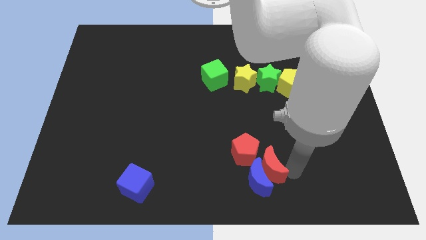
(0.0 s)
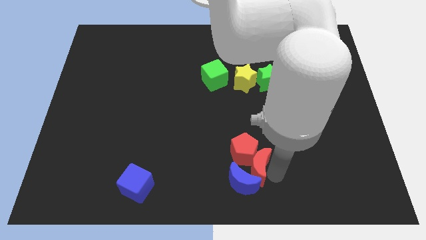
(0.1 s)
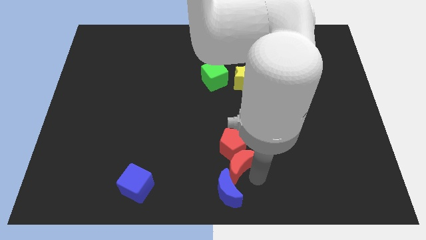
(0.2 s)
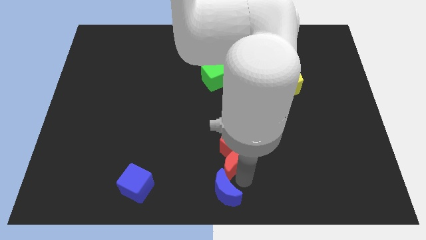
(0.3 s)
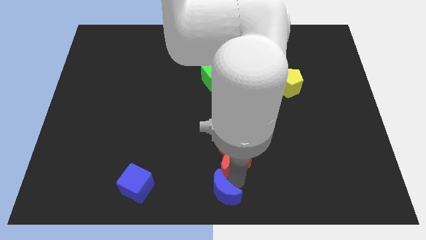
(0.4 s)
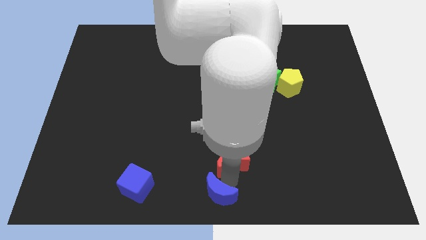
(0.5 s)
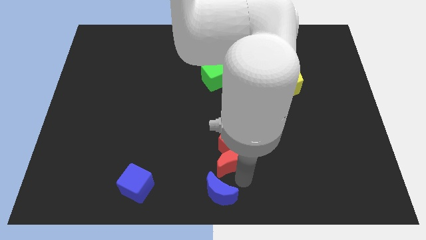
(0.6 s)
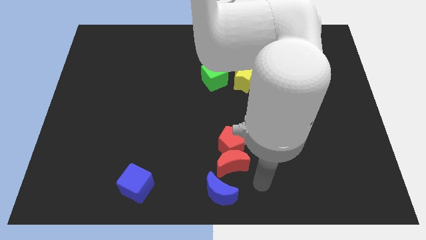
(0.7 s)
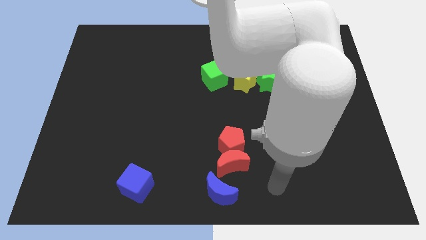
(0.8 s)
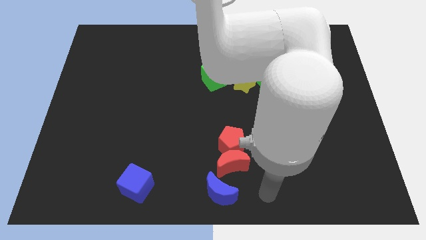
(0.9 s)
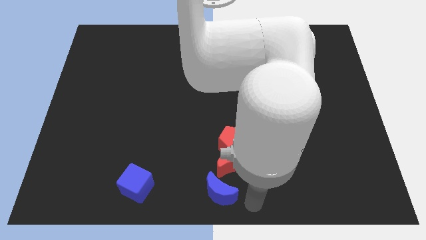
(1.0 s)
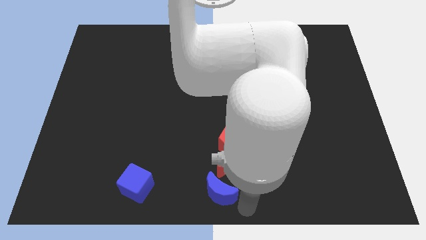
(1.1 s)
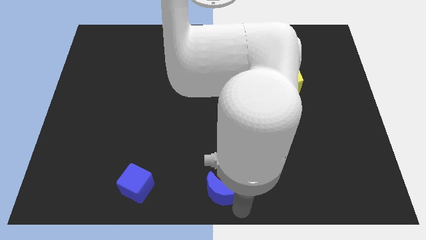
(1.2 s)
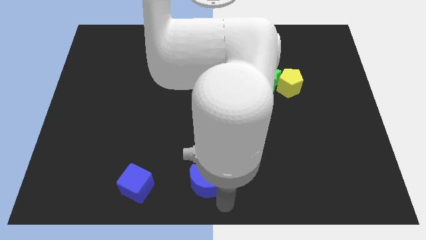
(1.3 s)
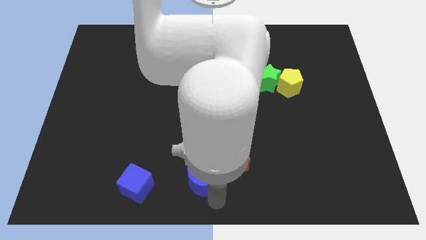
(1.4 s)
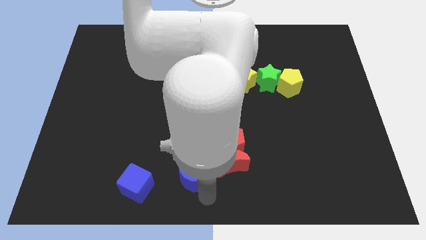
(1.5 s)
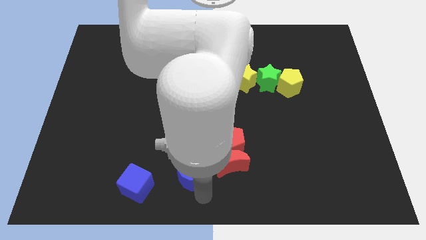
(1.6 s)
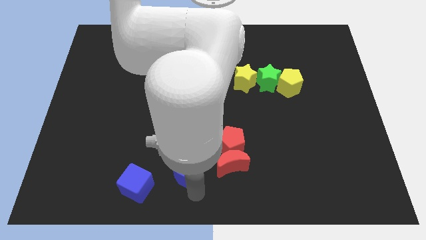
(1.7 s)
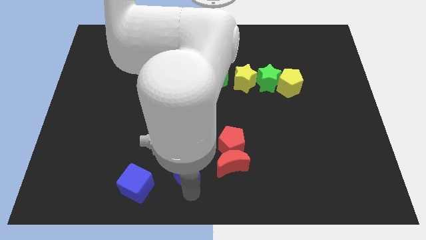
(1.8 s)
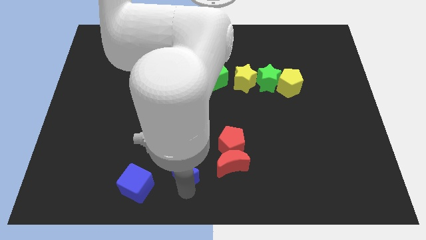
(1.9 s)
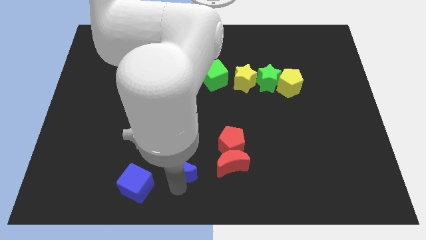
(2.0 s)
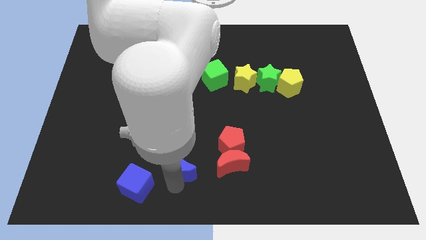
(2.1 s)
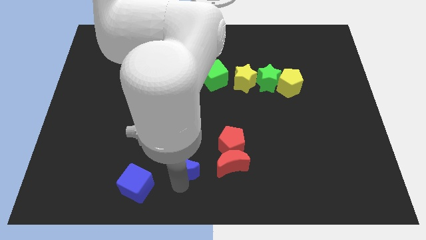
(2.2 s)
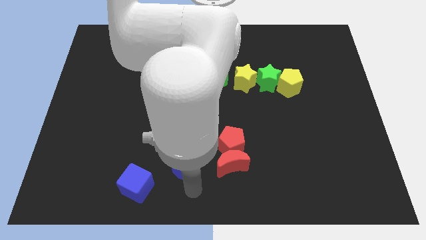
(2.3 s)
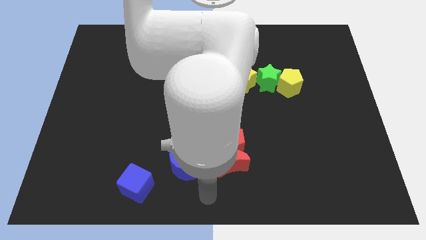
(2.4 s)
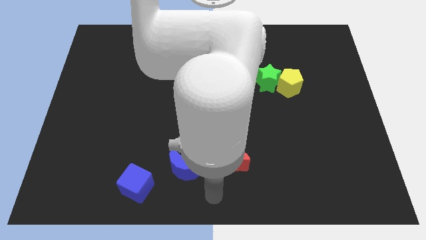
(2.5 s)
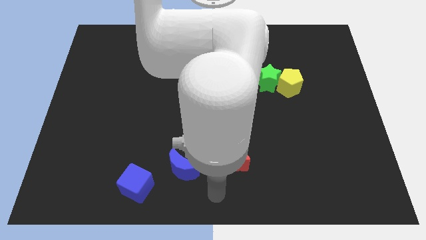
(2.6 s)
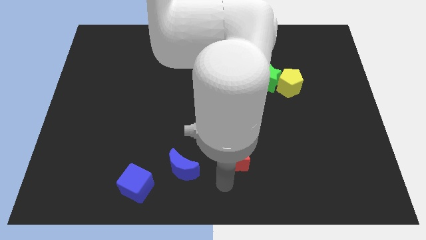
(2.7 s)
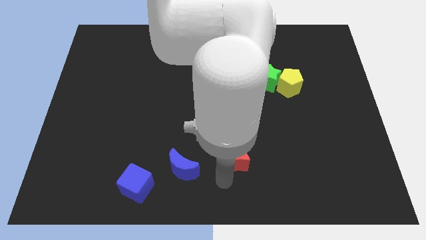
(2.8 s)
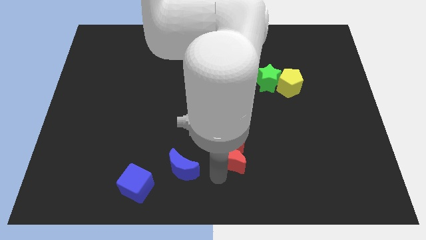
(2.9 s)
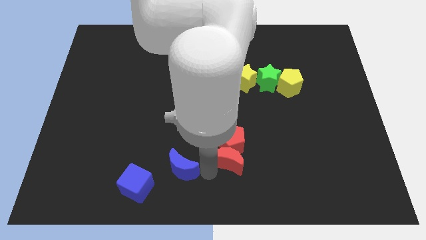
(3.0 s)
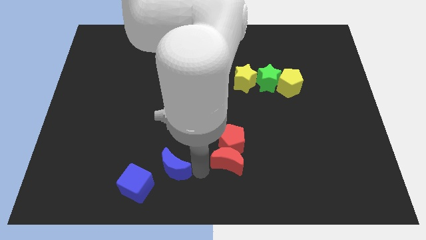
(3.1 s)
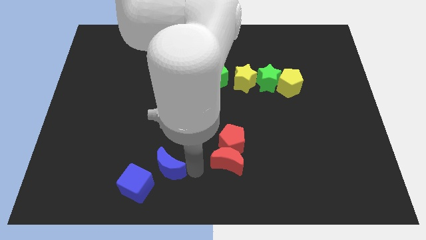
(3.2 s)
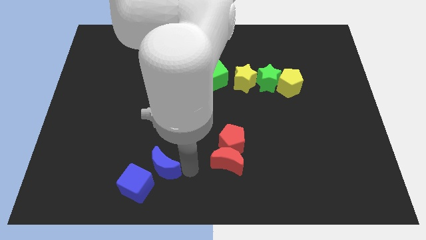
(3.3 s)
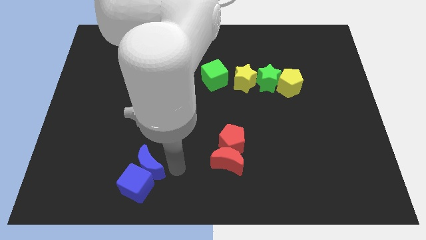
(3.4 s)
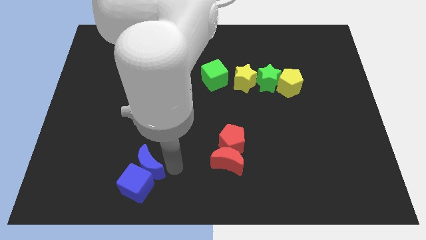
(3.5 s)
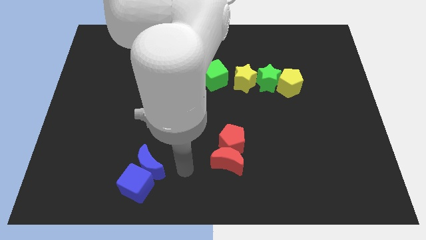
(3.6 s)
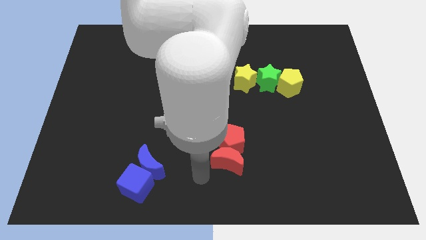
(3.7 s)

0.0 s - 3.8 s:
place the blue moon at the top of the blue cube

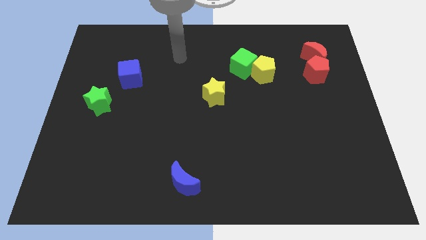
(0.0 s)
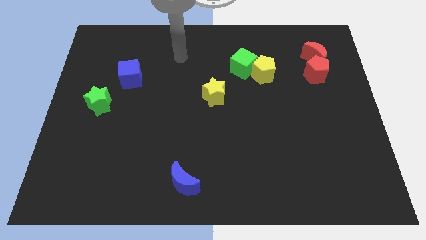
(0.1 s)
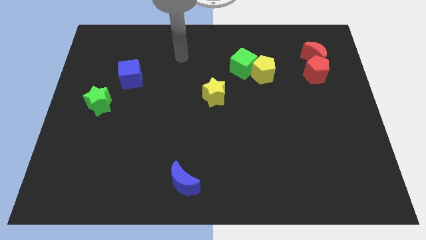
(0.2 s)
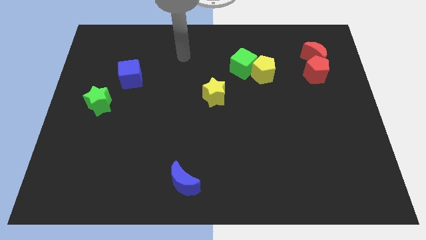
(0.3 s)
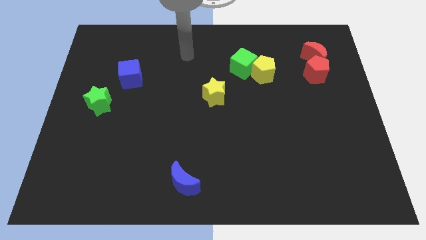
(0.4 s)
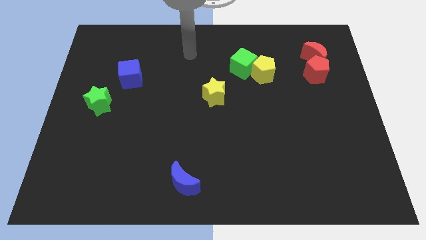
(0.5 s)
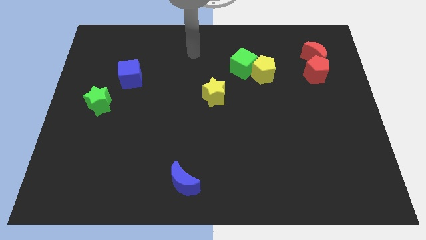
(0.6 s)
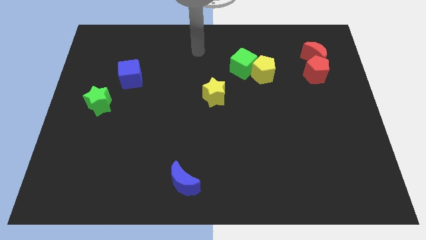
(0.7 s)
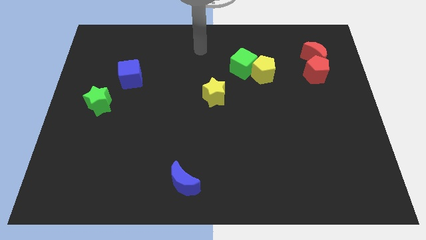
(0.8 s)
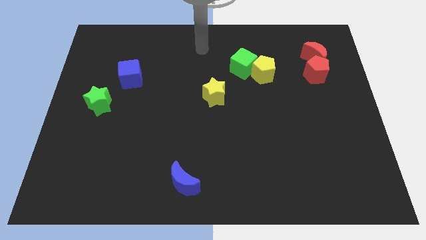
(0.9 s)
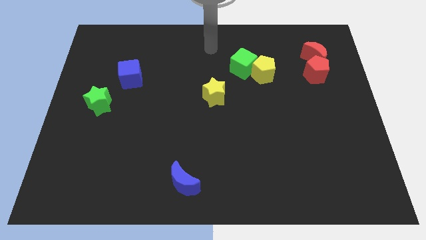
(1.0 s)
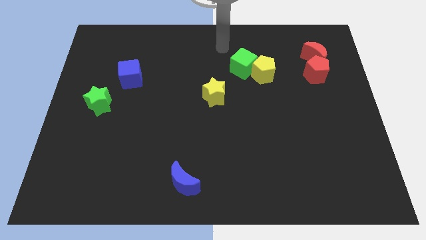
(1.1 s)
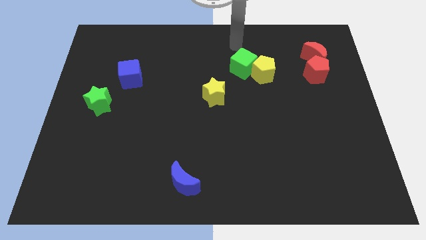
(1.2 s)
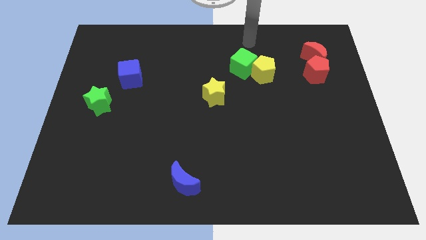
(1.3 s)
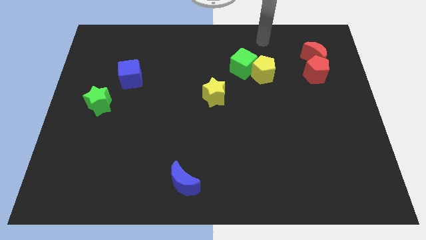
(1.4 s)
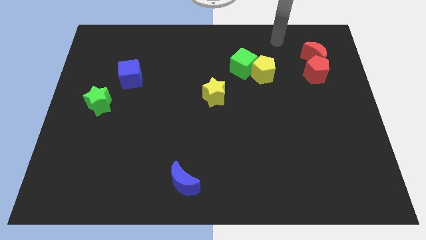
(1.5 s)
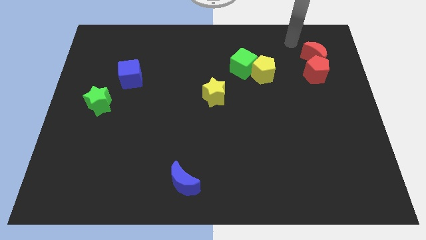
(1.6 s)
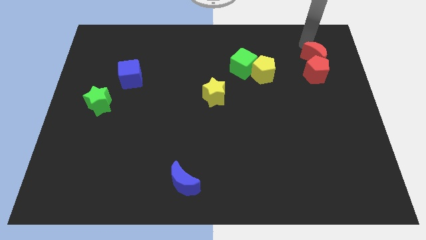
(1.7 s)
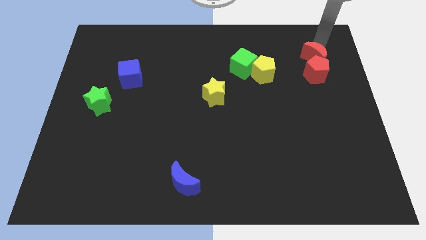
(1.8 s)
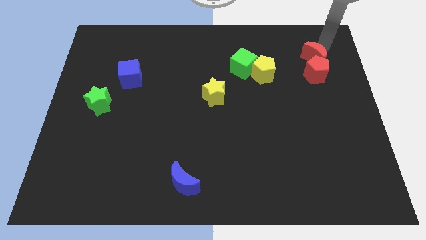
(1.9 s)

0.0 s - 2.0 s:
move your arm towards the red moon

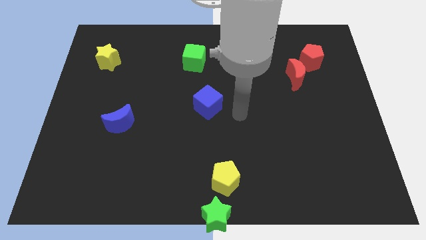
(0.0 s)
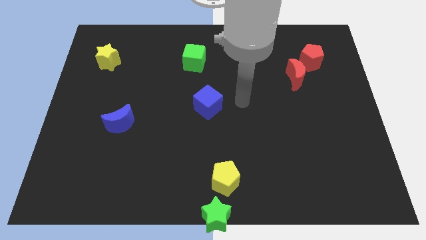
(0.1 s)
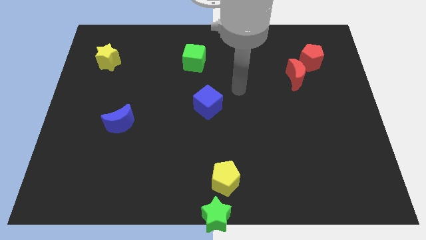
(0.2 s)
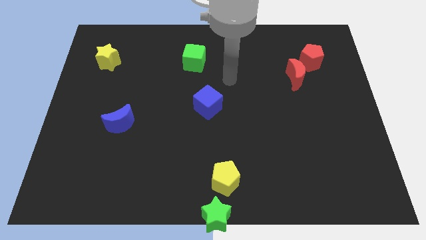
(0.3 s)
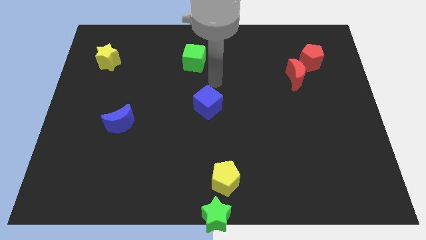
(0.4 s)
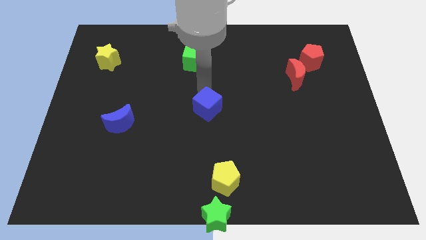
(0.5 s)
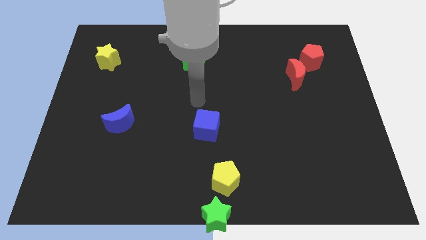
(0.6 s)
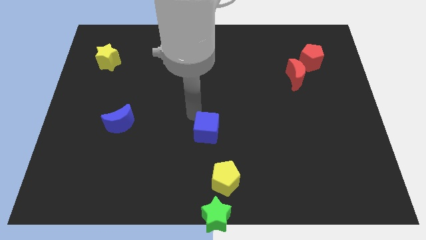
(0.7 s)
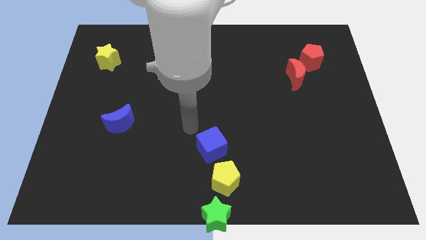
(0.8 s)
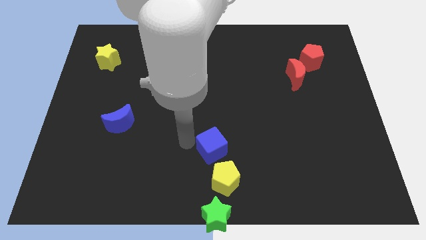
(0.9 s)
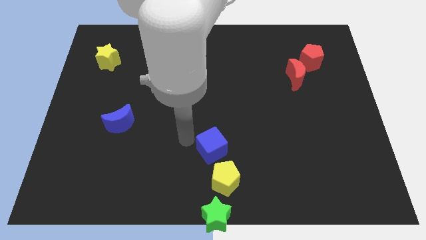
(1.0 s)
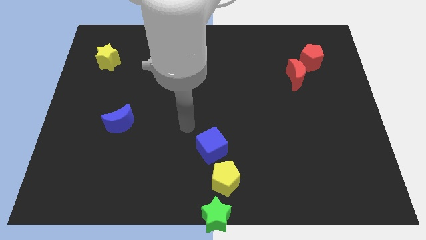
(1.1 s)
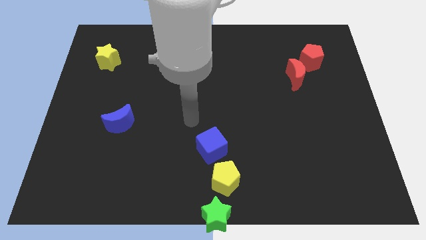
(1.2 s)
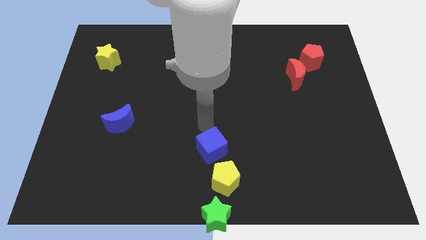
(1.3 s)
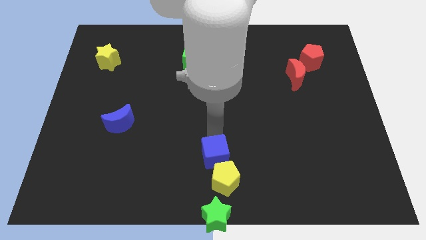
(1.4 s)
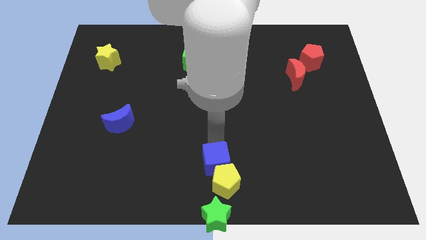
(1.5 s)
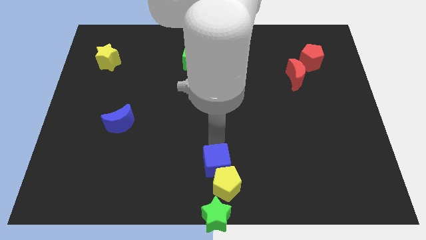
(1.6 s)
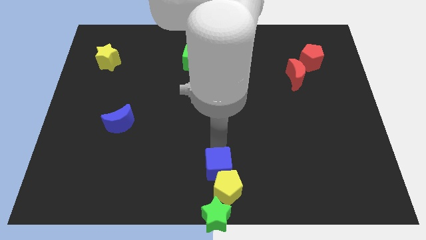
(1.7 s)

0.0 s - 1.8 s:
push the blue cube into yellow pentagon

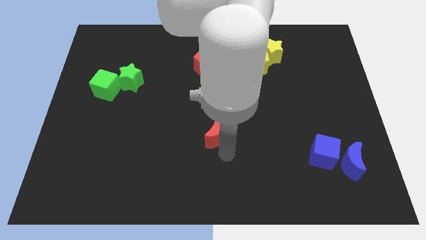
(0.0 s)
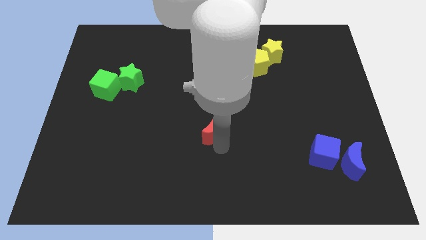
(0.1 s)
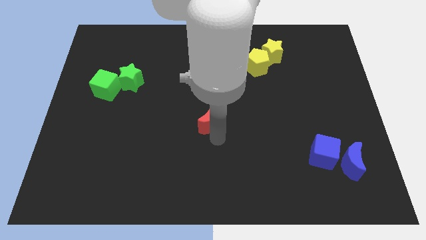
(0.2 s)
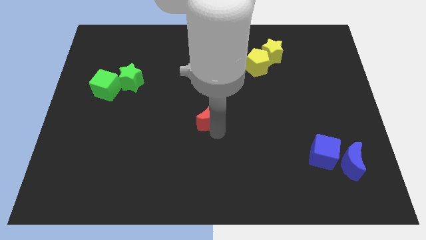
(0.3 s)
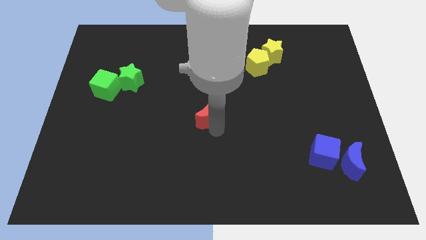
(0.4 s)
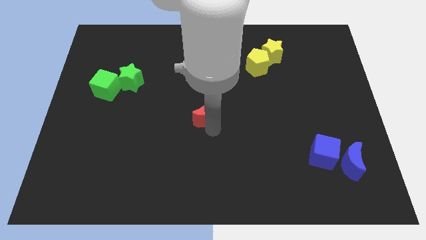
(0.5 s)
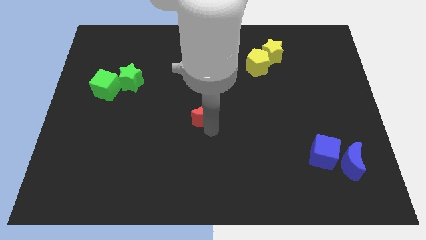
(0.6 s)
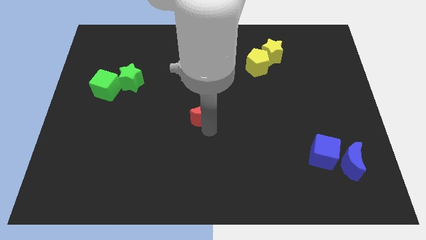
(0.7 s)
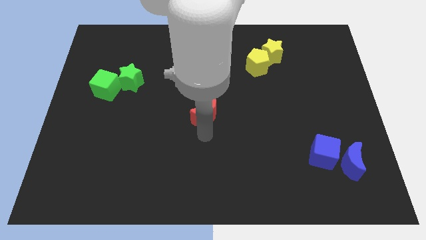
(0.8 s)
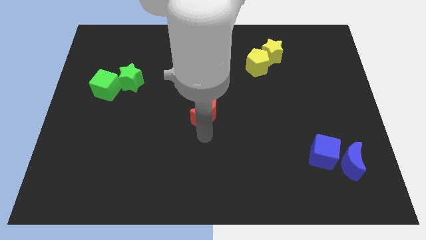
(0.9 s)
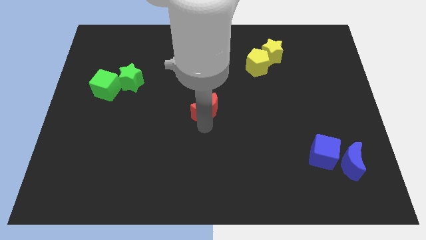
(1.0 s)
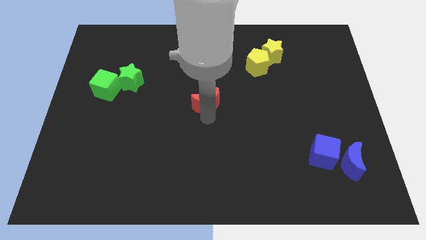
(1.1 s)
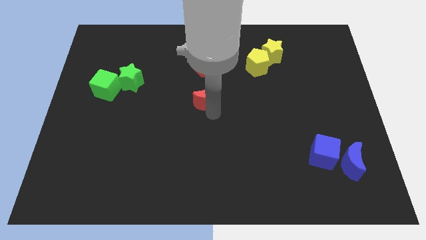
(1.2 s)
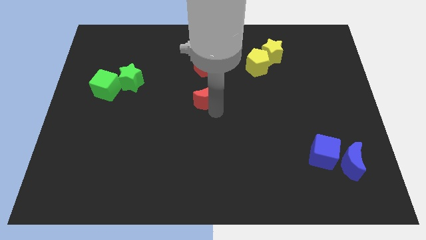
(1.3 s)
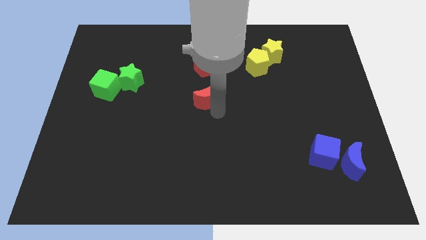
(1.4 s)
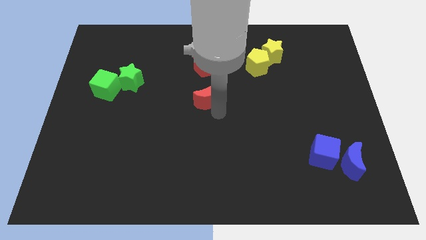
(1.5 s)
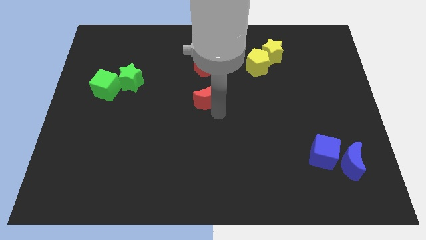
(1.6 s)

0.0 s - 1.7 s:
place red moon to the bottom of red pentagon
